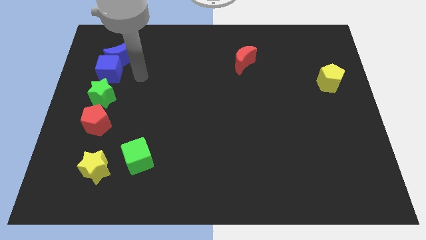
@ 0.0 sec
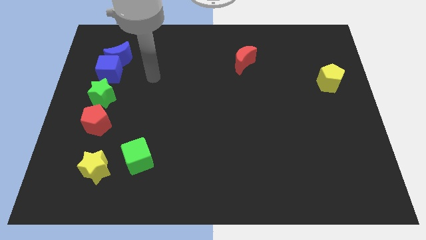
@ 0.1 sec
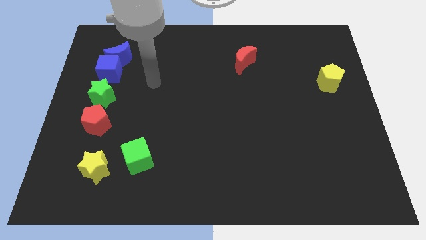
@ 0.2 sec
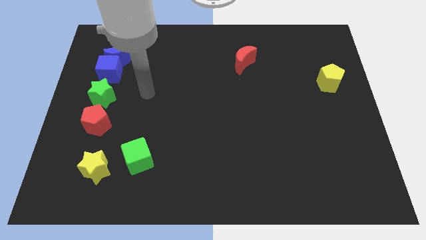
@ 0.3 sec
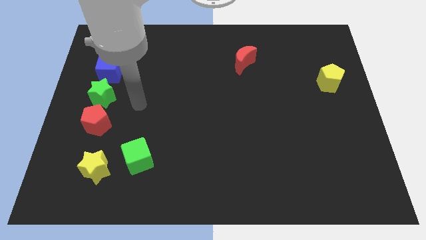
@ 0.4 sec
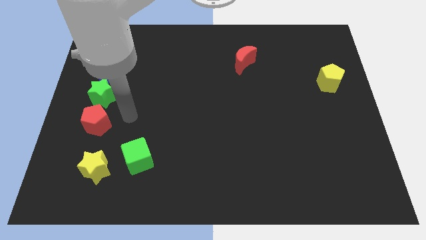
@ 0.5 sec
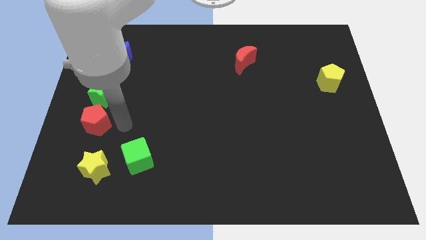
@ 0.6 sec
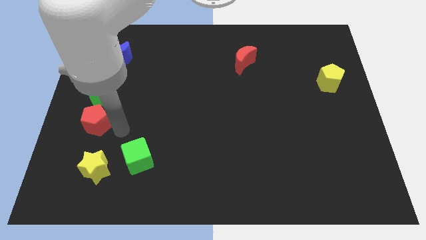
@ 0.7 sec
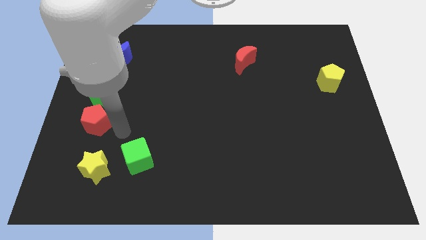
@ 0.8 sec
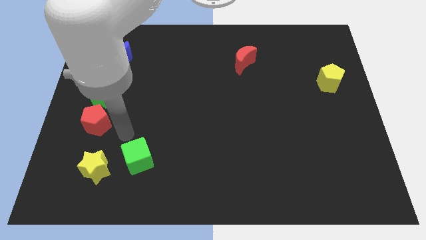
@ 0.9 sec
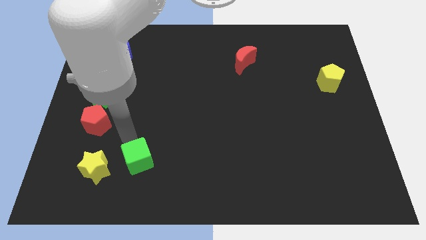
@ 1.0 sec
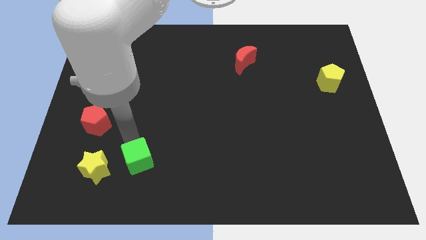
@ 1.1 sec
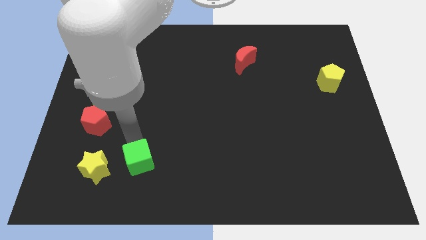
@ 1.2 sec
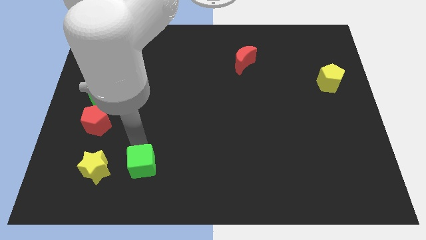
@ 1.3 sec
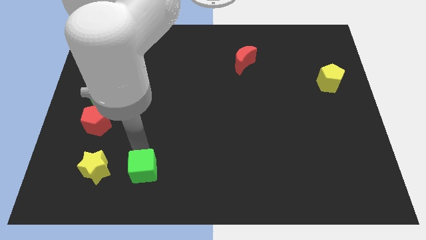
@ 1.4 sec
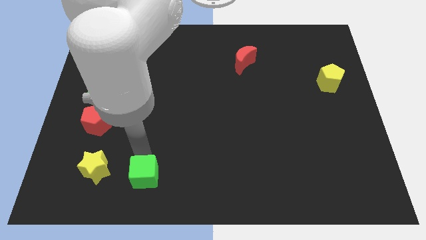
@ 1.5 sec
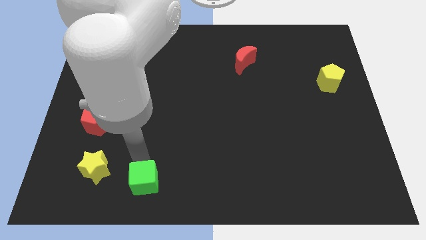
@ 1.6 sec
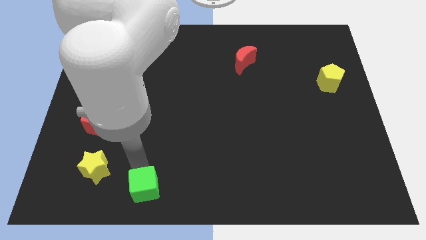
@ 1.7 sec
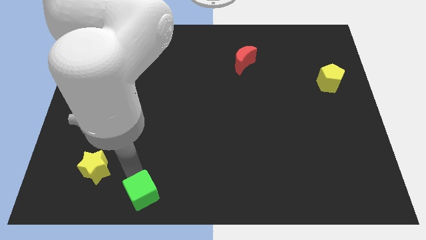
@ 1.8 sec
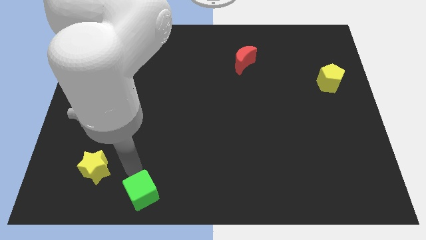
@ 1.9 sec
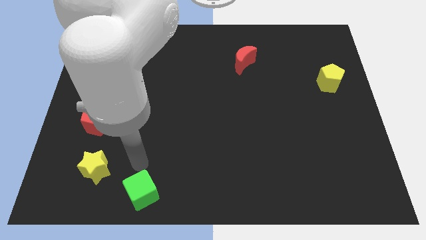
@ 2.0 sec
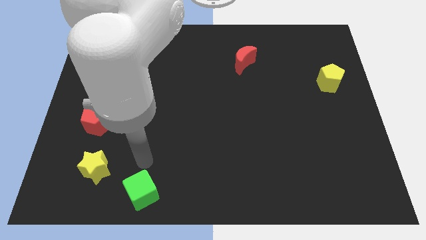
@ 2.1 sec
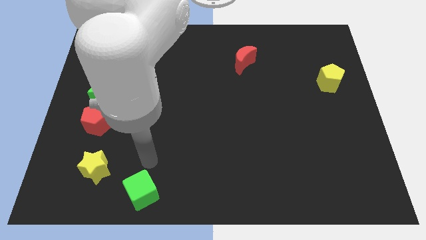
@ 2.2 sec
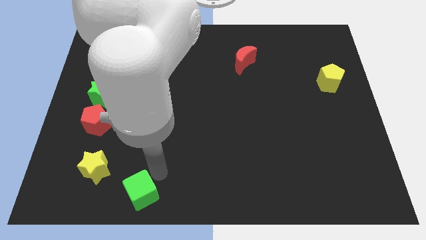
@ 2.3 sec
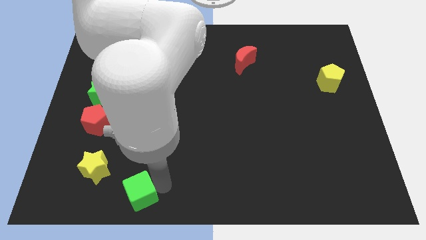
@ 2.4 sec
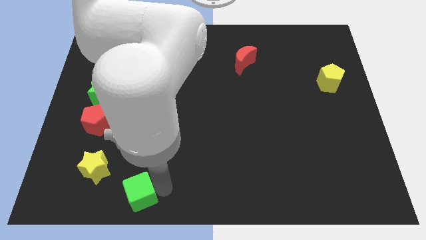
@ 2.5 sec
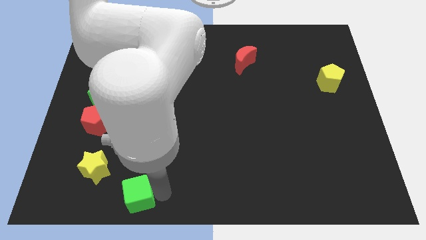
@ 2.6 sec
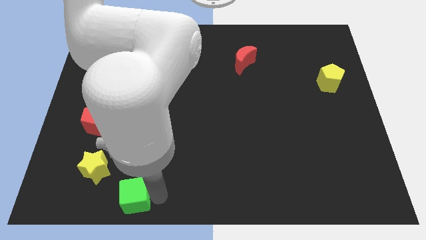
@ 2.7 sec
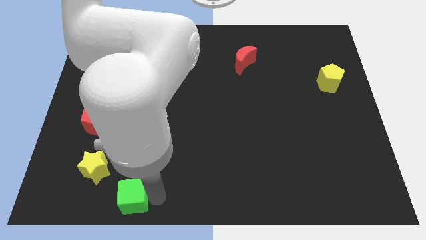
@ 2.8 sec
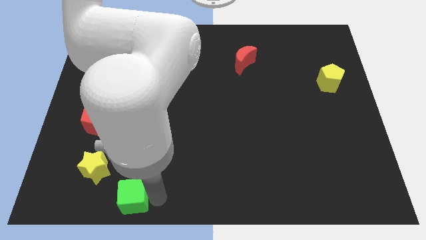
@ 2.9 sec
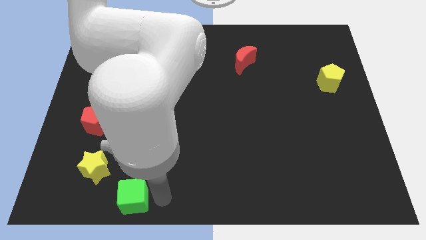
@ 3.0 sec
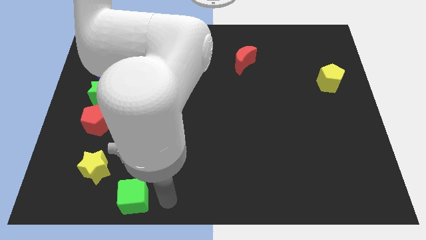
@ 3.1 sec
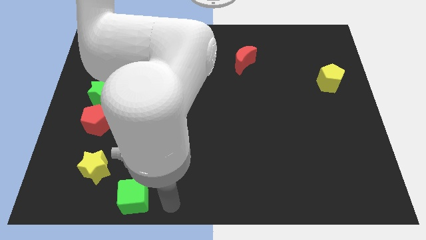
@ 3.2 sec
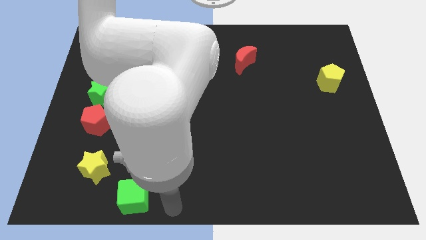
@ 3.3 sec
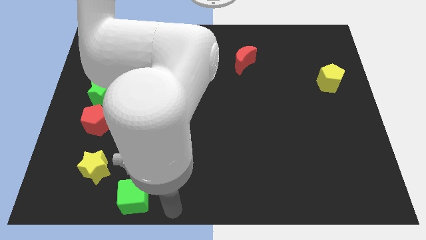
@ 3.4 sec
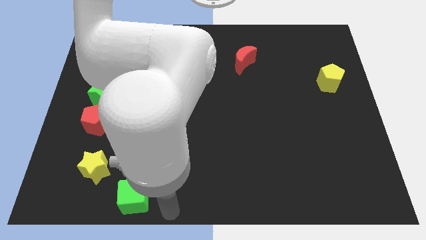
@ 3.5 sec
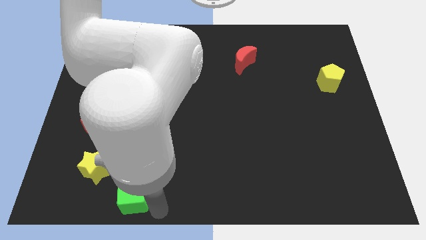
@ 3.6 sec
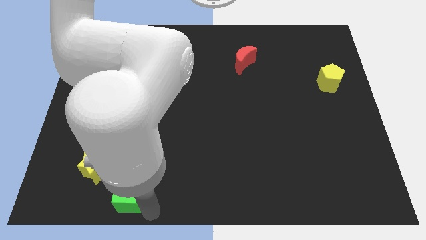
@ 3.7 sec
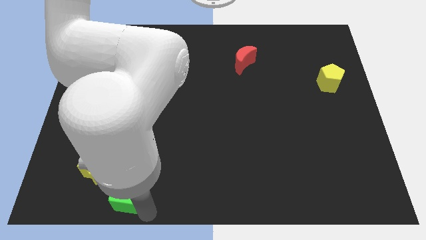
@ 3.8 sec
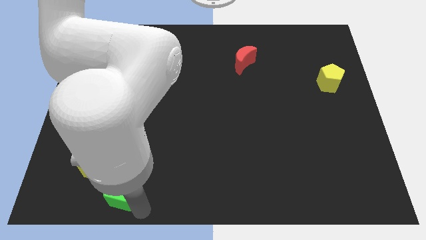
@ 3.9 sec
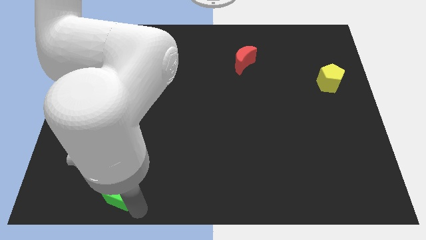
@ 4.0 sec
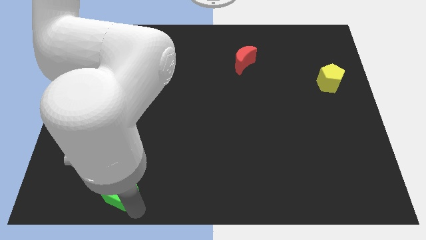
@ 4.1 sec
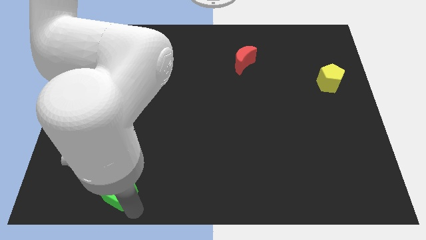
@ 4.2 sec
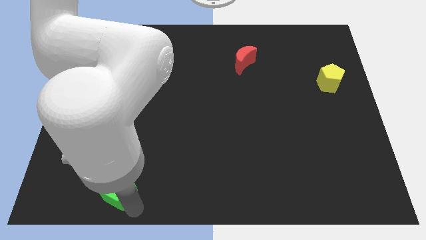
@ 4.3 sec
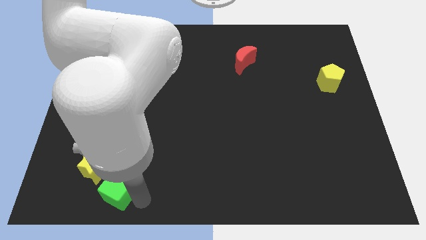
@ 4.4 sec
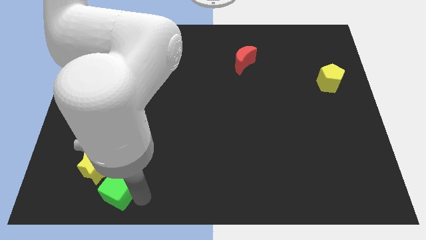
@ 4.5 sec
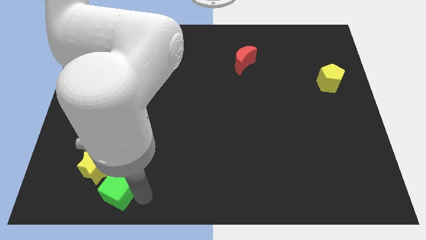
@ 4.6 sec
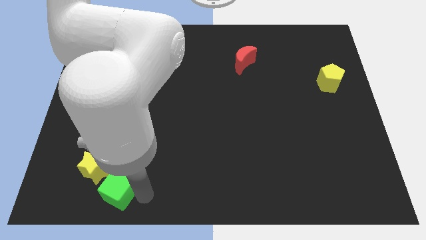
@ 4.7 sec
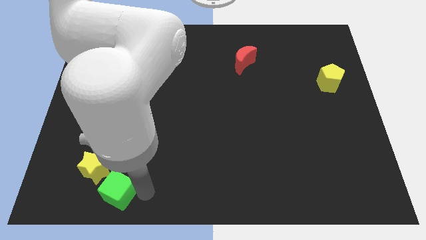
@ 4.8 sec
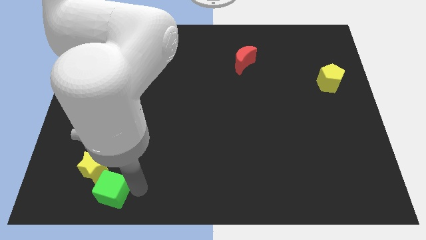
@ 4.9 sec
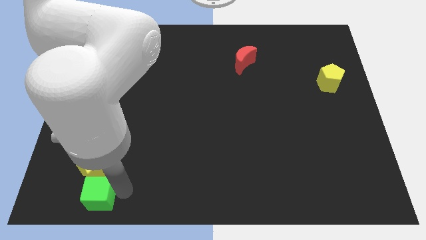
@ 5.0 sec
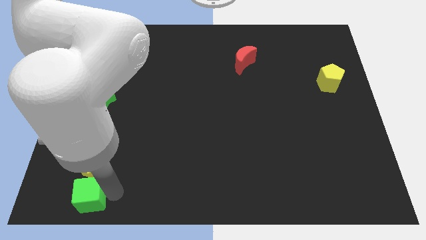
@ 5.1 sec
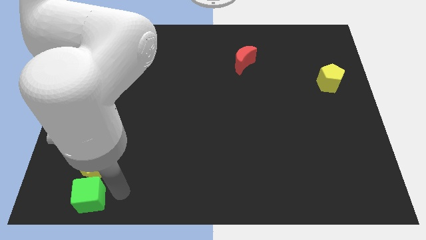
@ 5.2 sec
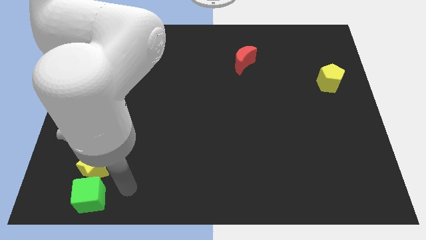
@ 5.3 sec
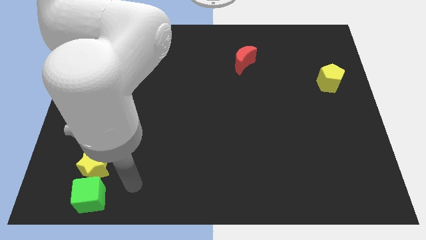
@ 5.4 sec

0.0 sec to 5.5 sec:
move the green cube to the bottom of the yellow star

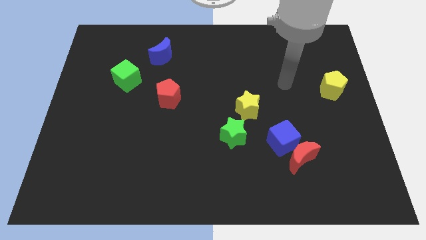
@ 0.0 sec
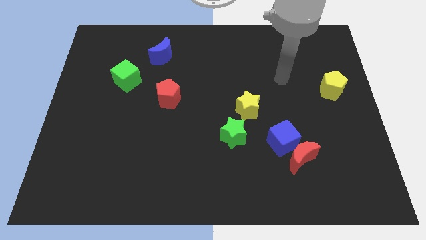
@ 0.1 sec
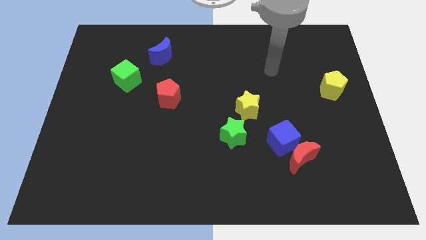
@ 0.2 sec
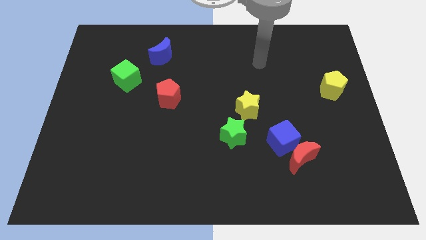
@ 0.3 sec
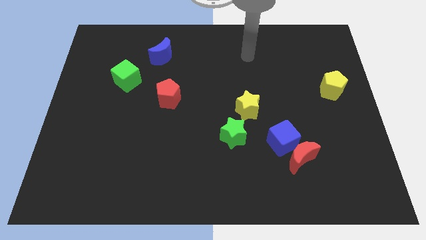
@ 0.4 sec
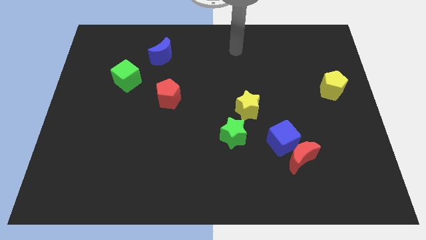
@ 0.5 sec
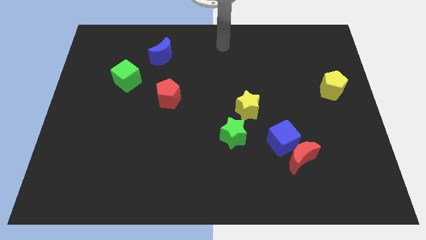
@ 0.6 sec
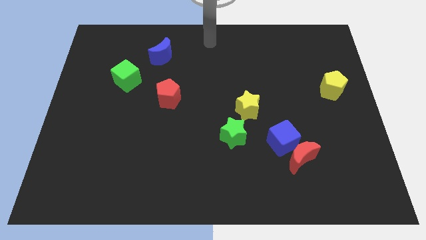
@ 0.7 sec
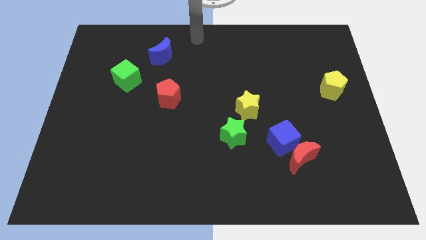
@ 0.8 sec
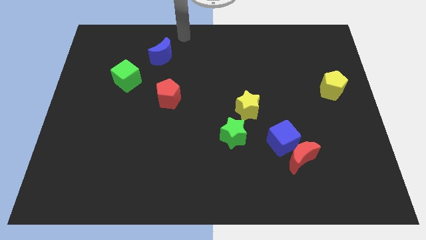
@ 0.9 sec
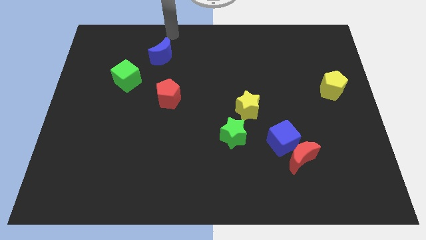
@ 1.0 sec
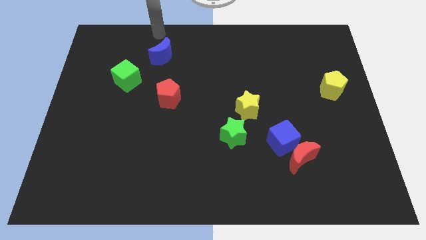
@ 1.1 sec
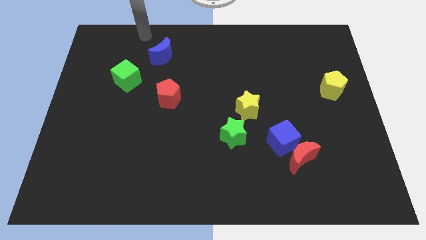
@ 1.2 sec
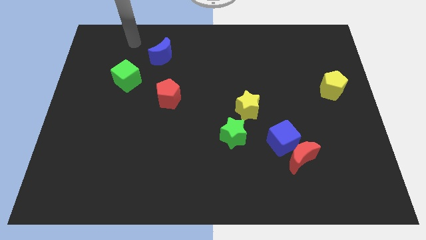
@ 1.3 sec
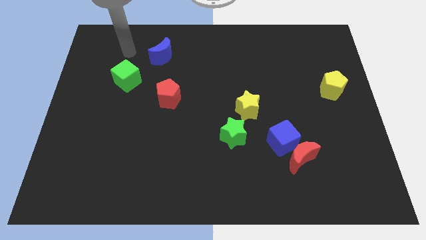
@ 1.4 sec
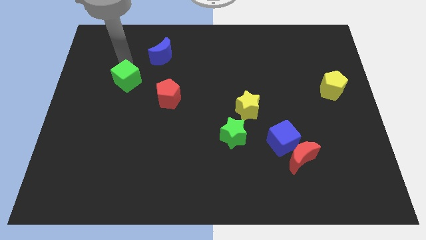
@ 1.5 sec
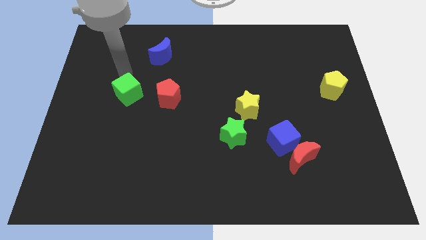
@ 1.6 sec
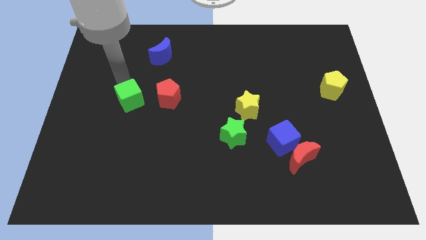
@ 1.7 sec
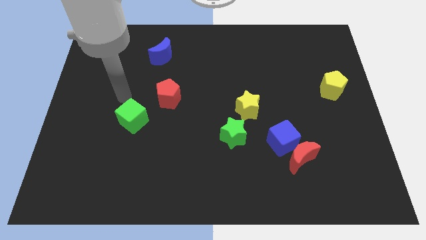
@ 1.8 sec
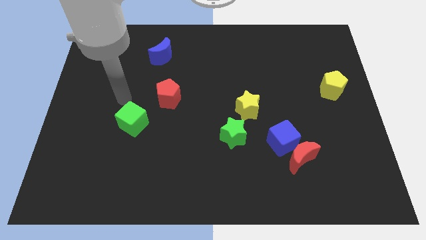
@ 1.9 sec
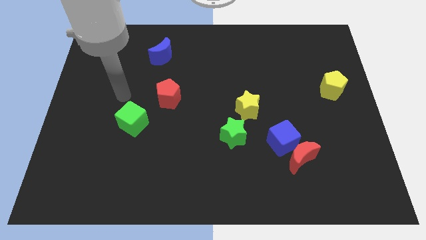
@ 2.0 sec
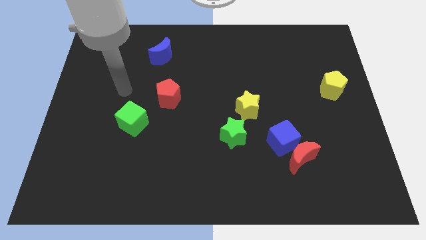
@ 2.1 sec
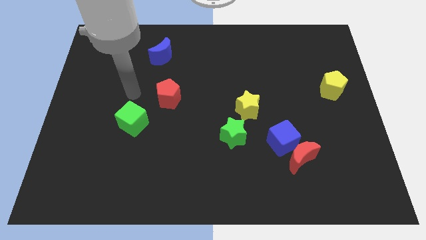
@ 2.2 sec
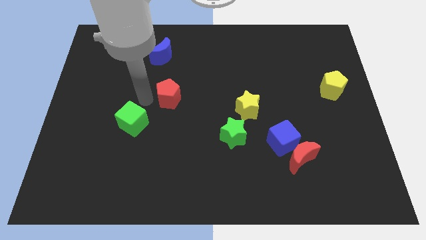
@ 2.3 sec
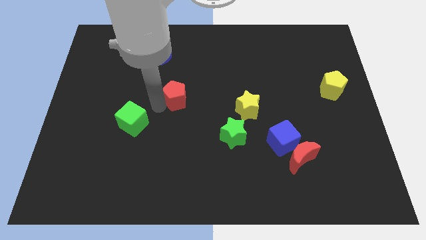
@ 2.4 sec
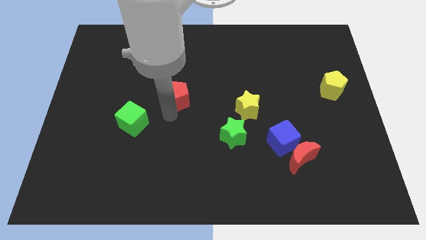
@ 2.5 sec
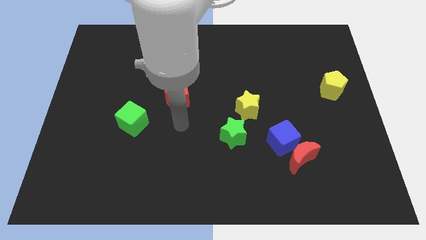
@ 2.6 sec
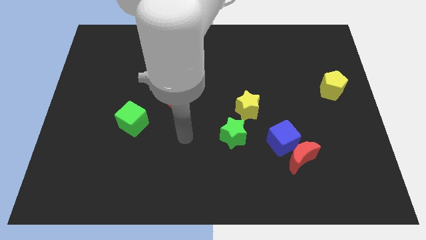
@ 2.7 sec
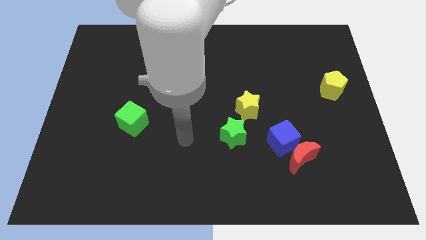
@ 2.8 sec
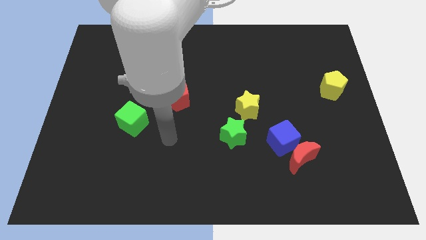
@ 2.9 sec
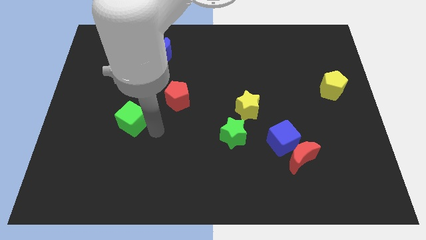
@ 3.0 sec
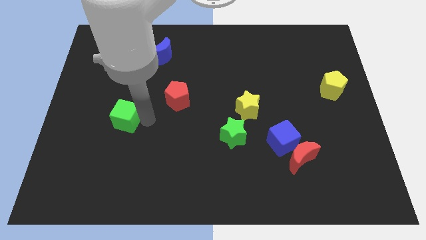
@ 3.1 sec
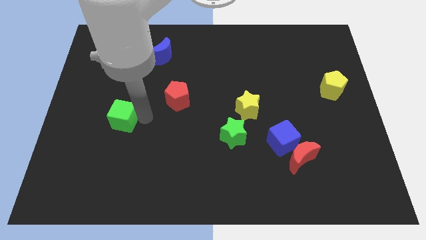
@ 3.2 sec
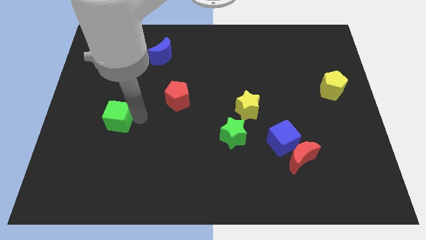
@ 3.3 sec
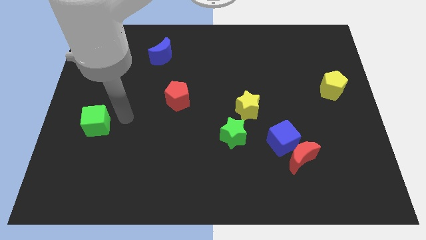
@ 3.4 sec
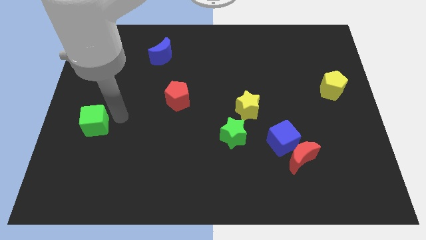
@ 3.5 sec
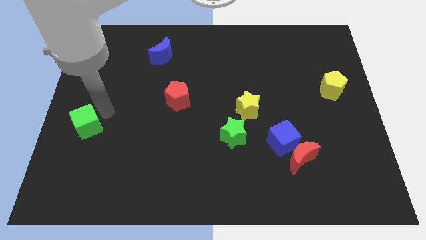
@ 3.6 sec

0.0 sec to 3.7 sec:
place the green cube left to the green star
